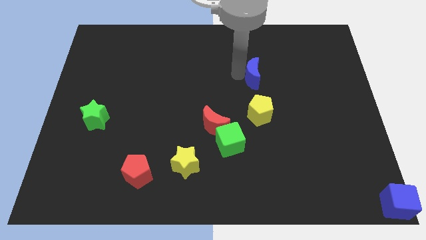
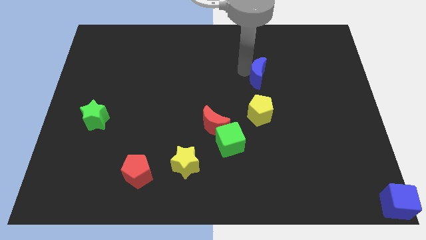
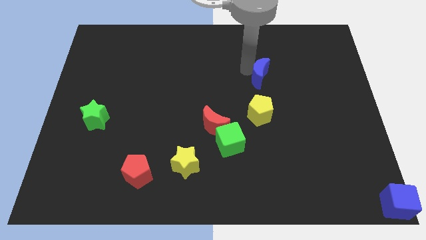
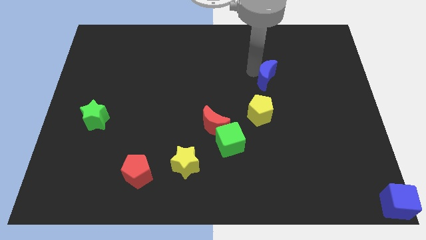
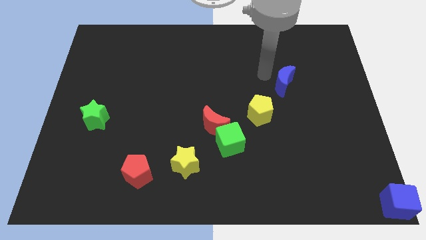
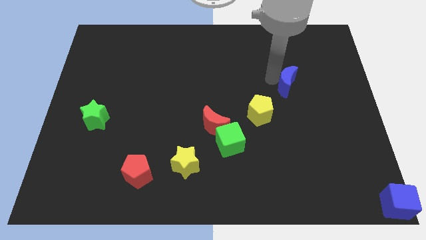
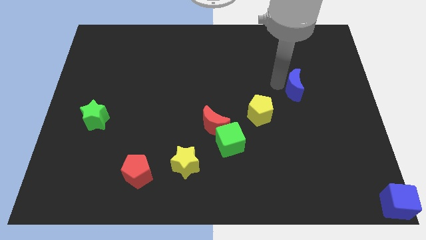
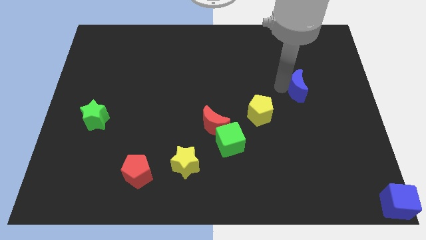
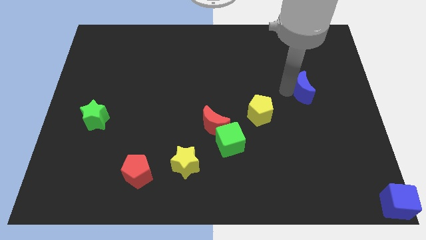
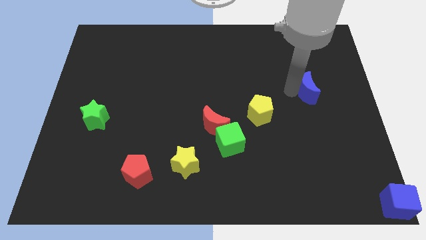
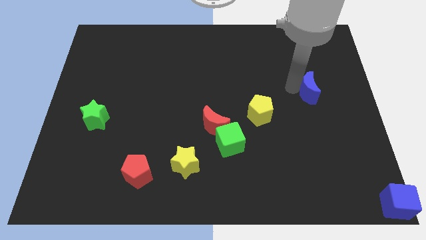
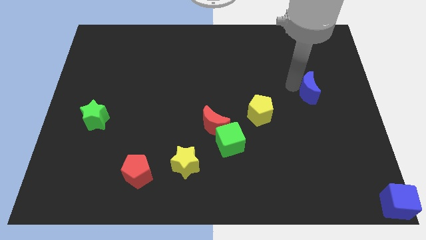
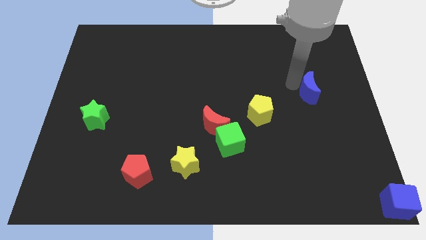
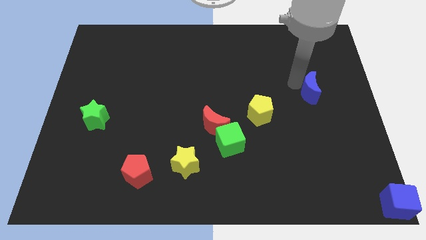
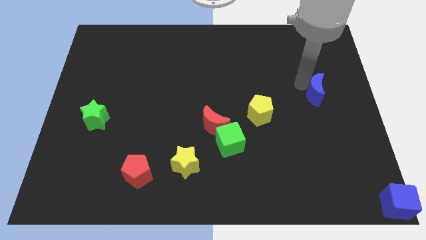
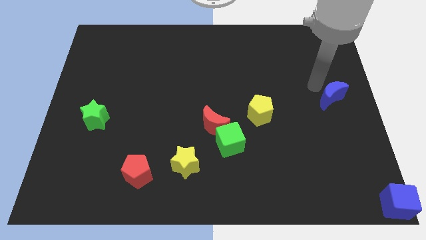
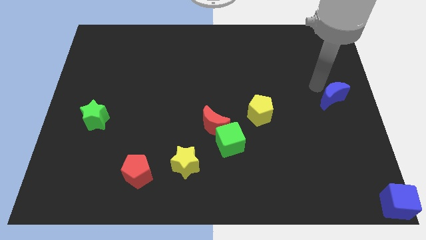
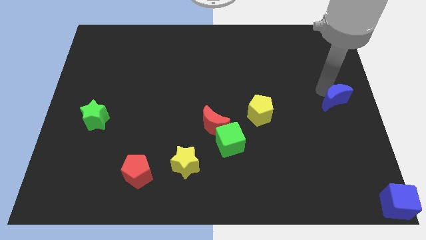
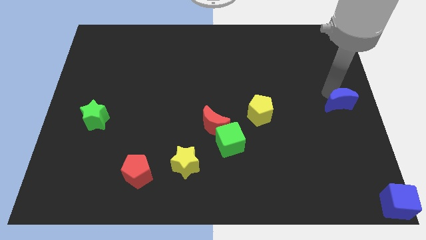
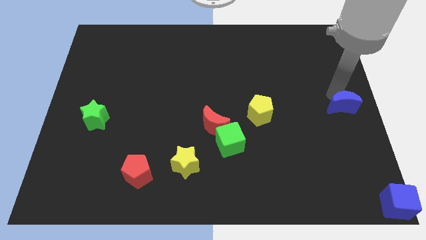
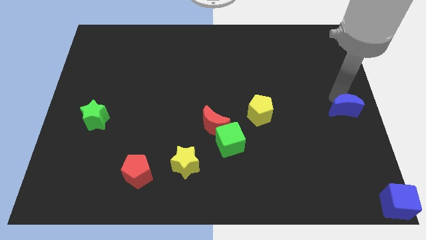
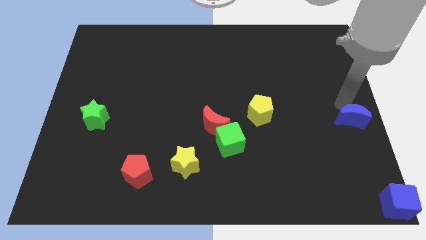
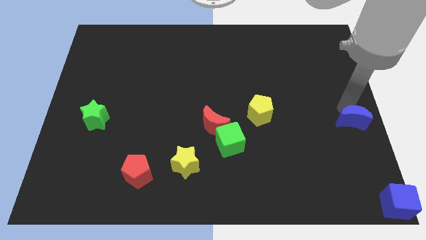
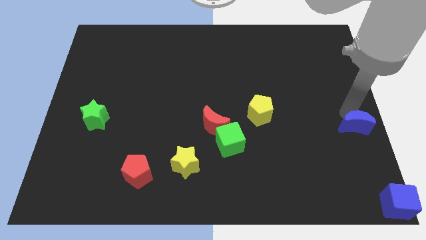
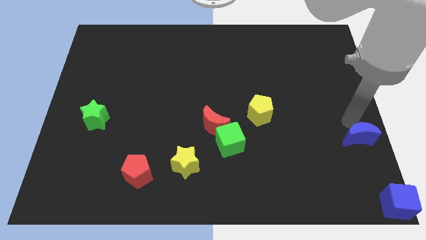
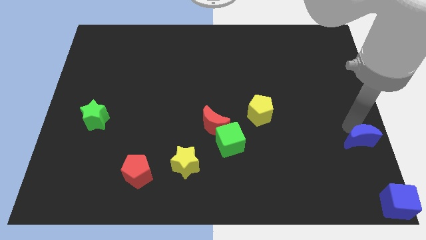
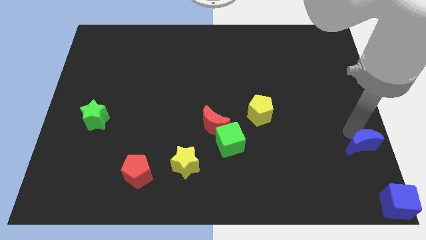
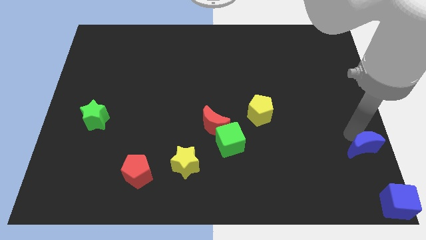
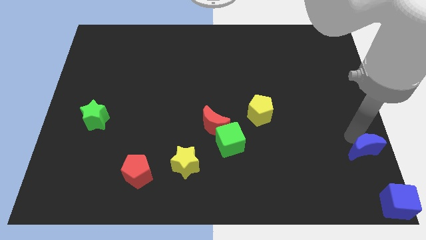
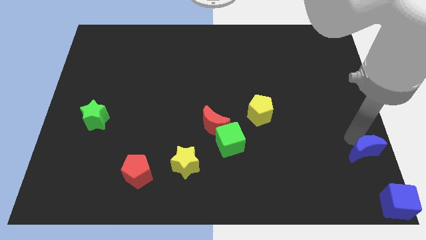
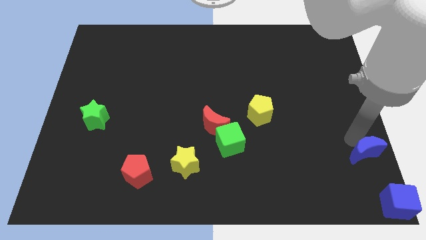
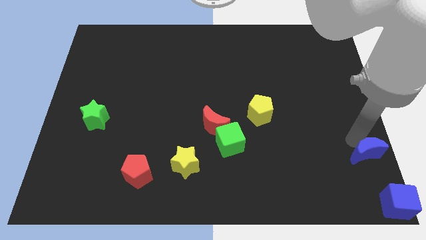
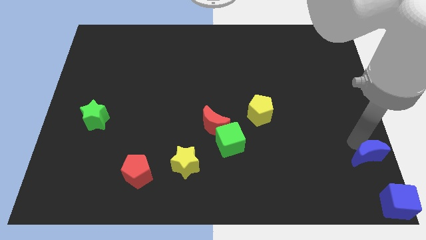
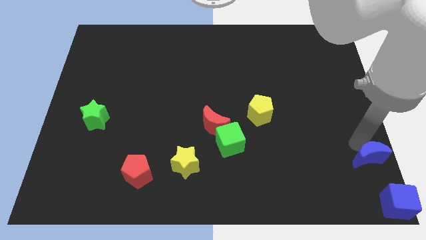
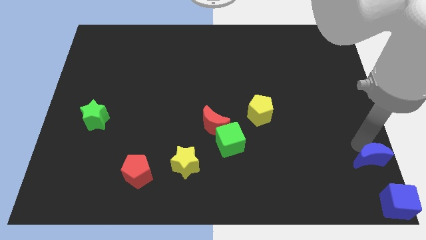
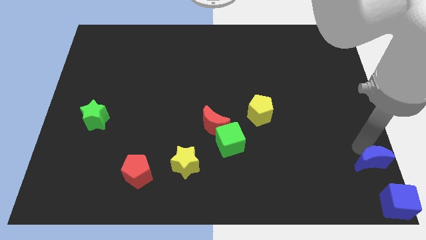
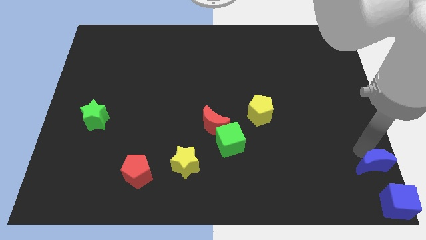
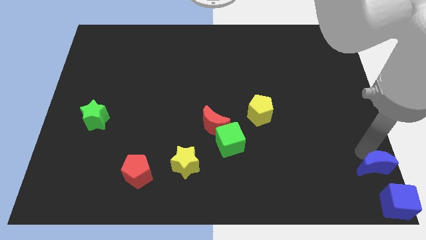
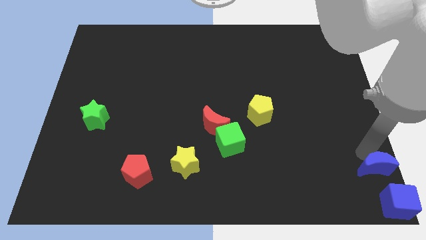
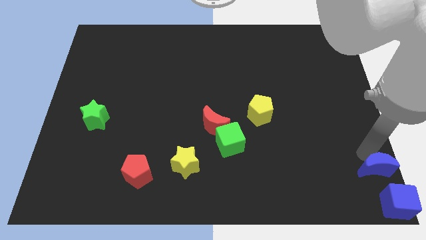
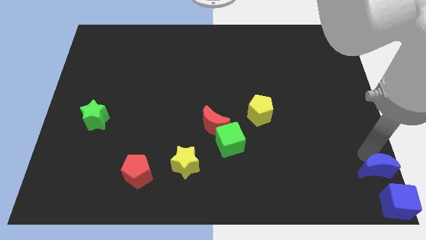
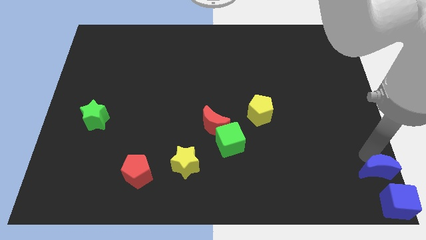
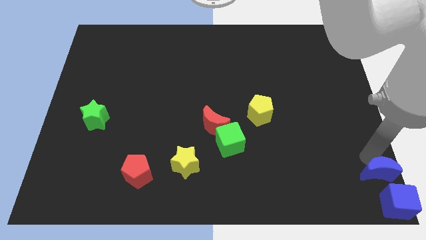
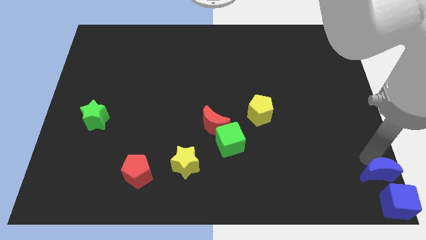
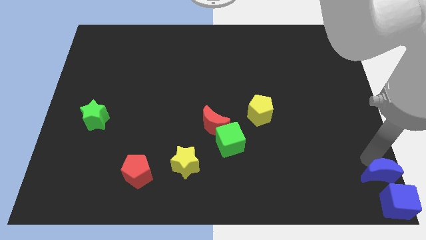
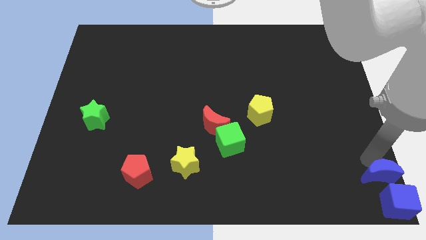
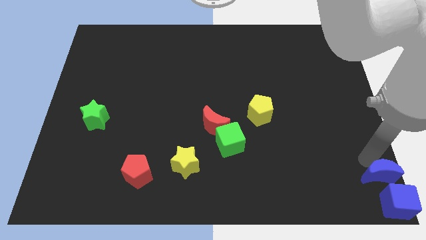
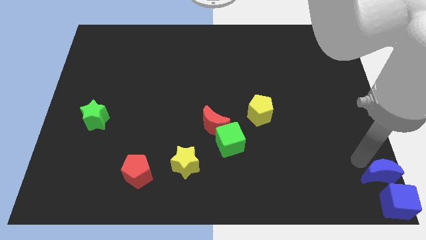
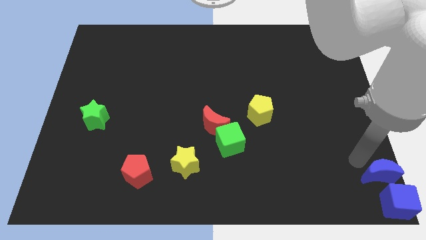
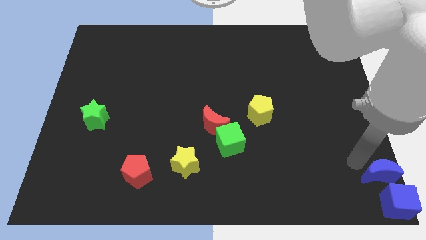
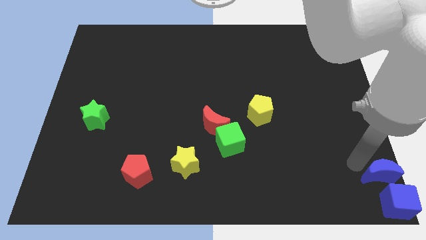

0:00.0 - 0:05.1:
push the blue crescent above the blue cube

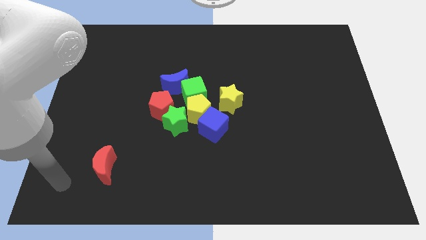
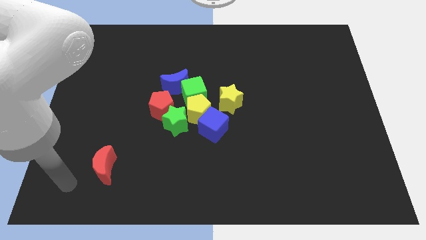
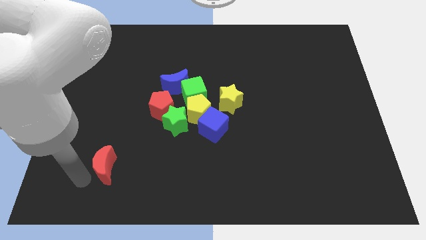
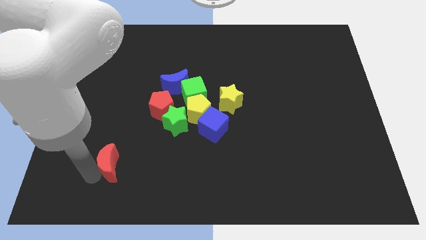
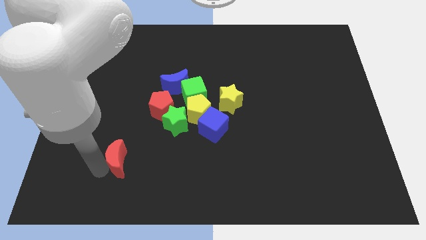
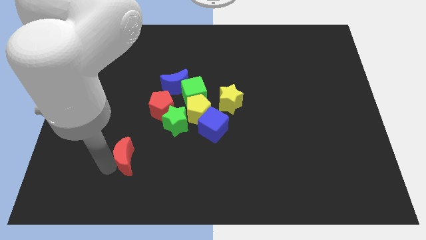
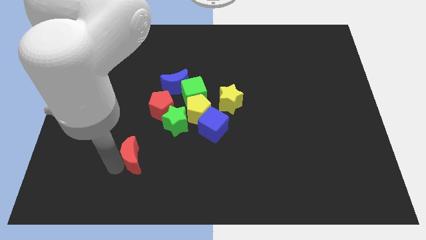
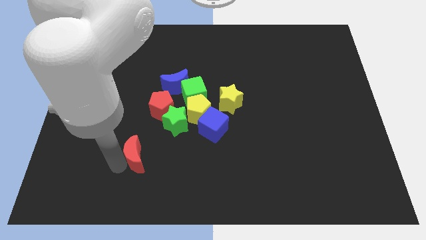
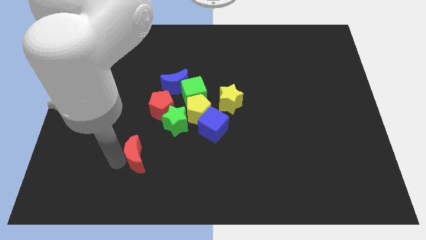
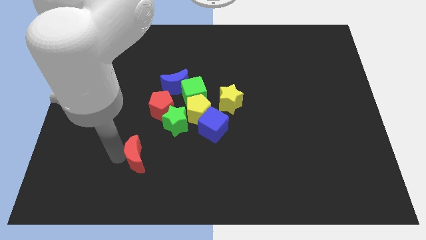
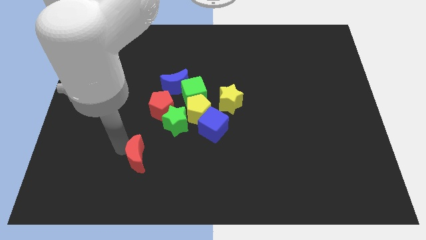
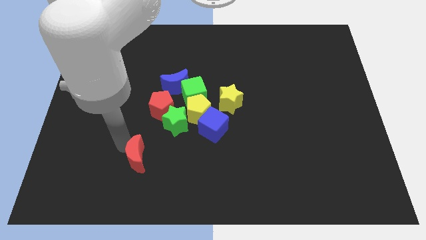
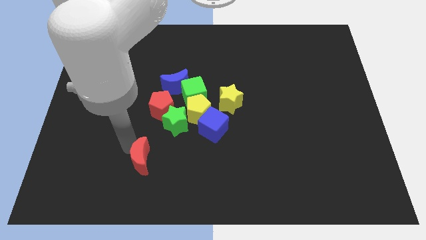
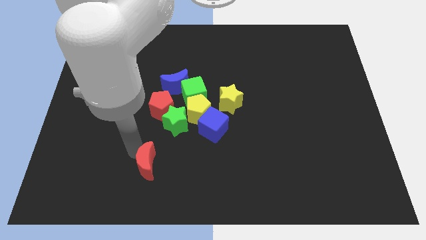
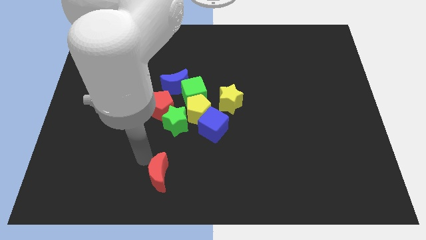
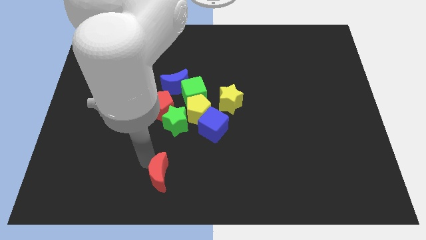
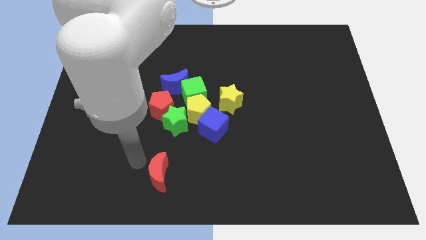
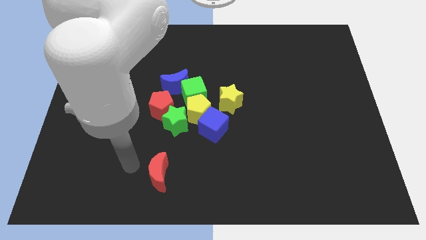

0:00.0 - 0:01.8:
place the red crescent below the green star

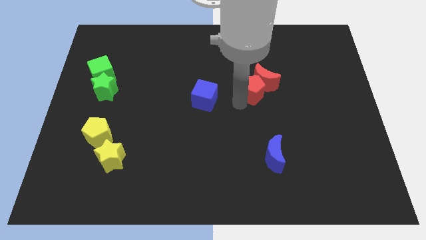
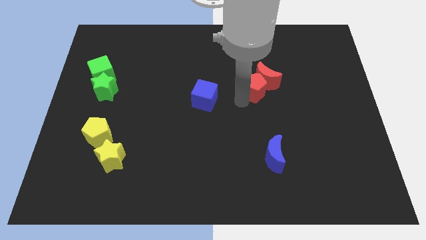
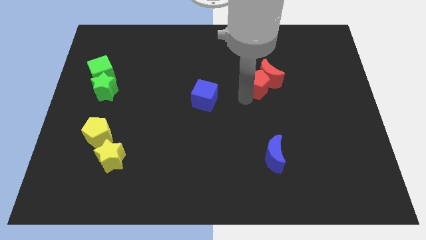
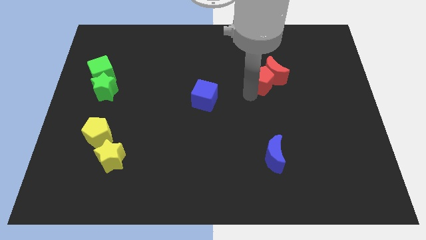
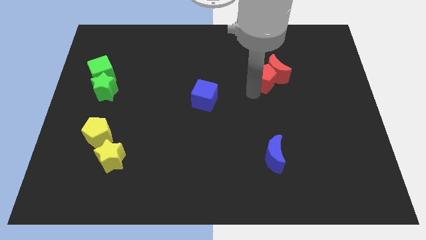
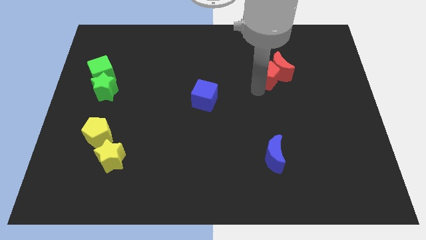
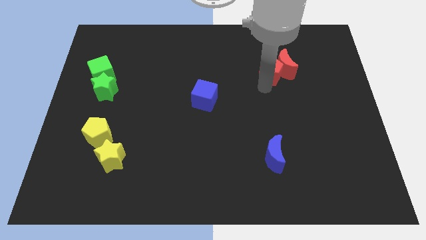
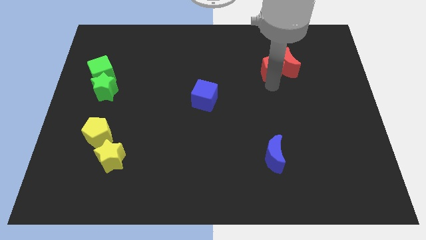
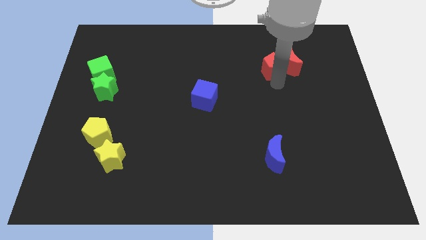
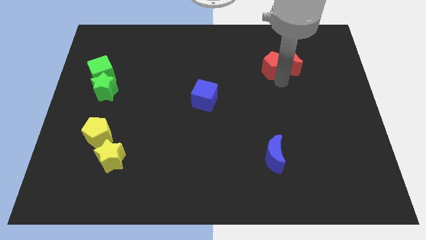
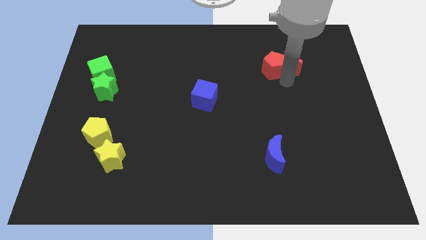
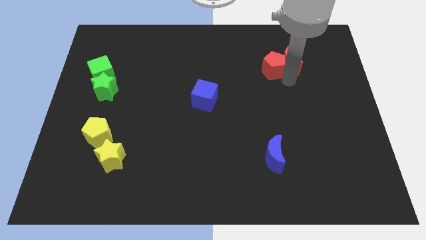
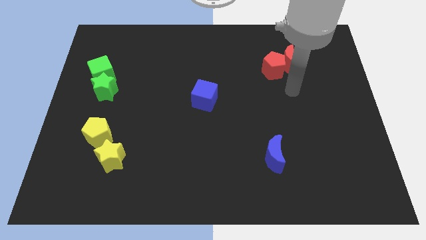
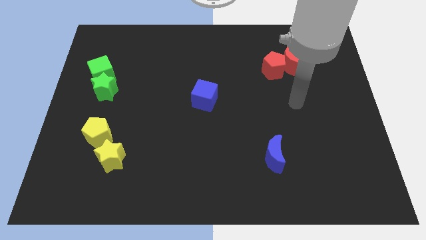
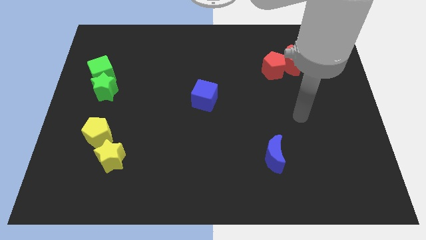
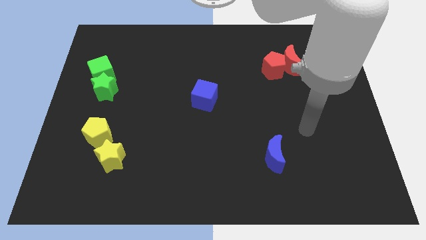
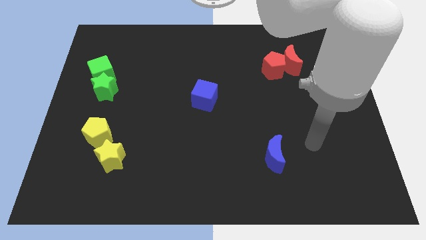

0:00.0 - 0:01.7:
push the red pentagon and the red moon at a time to the top right side

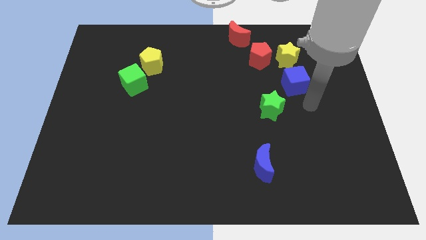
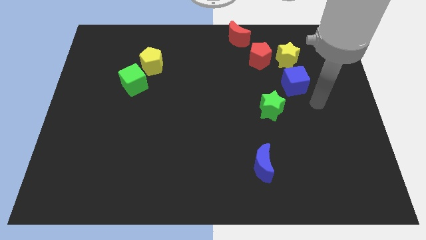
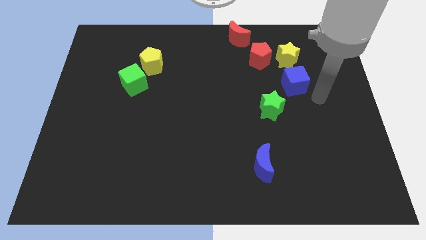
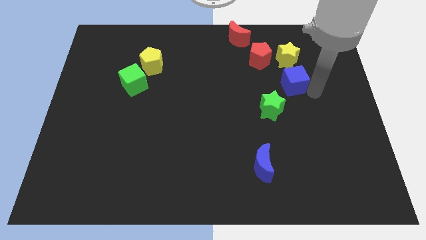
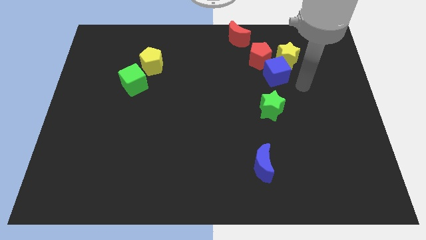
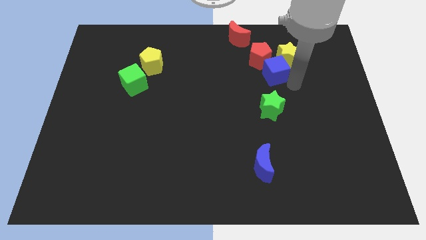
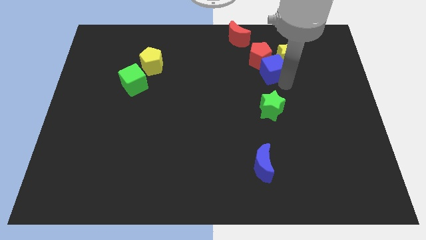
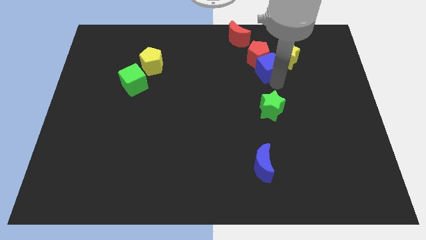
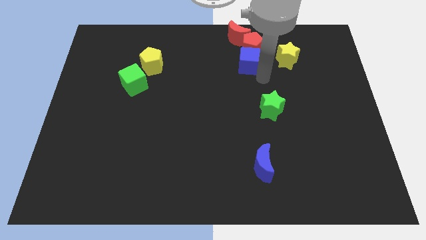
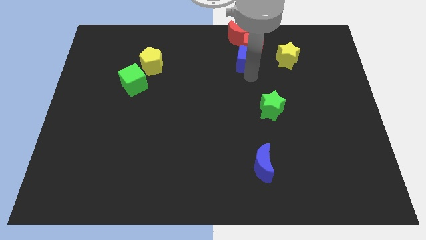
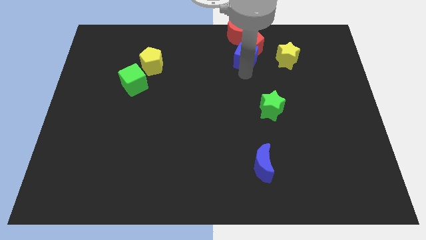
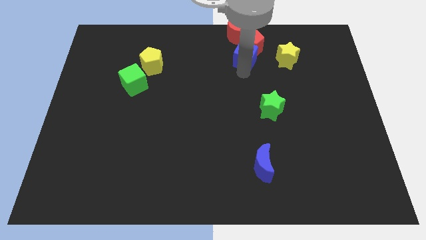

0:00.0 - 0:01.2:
push the blue cube into the red pentagon
